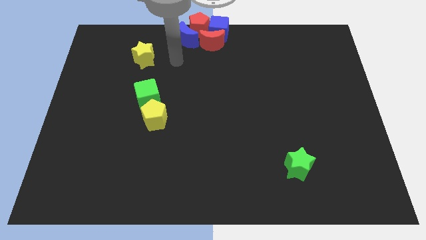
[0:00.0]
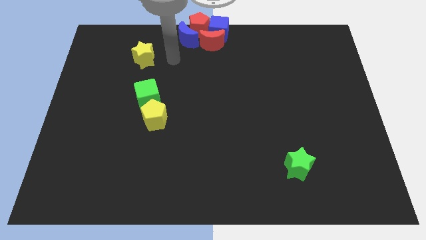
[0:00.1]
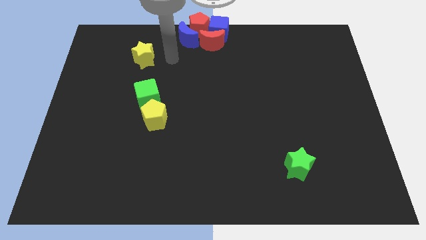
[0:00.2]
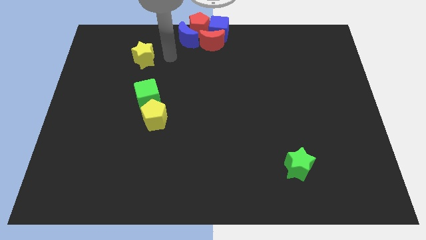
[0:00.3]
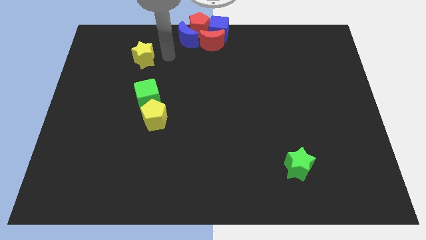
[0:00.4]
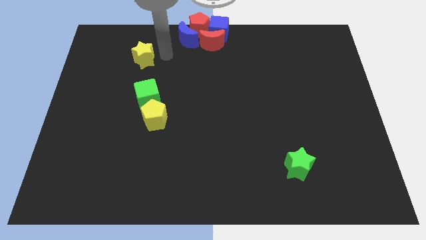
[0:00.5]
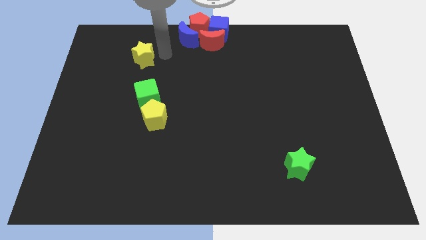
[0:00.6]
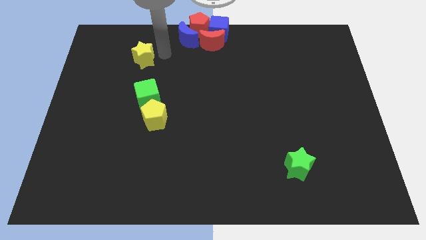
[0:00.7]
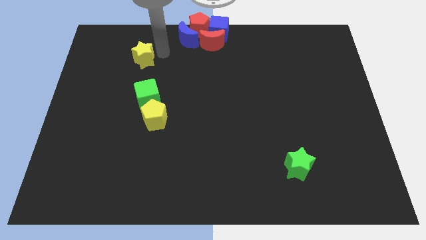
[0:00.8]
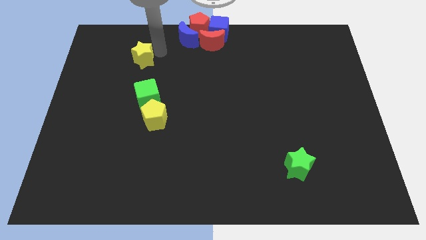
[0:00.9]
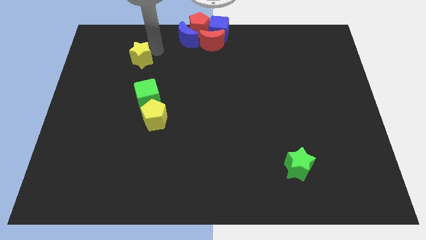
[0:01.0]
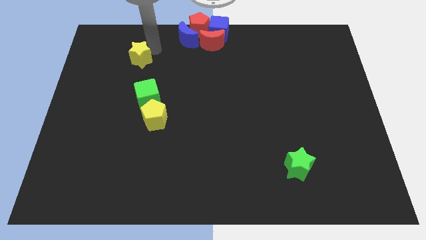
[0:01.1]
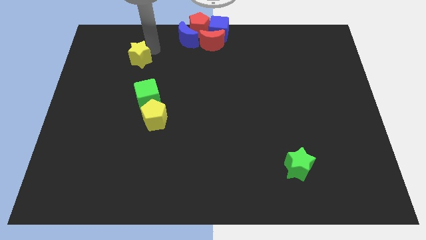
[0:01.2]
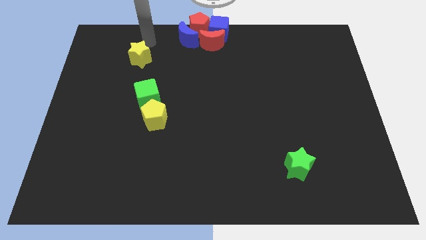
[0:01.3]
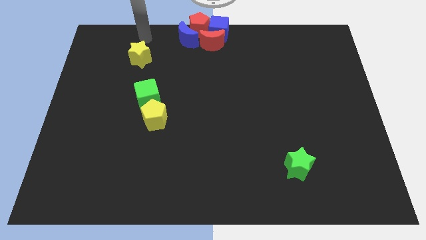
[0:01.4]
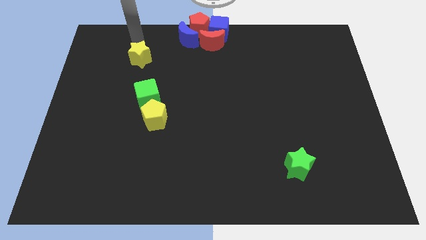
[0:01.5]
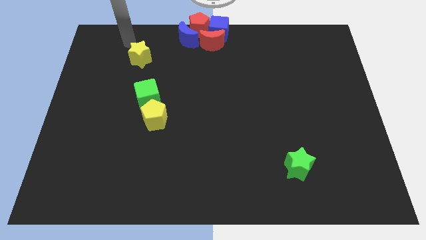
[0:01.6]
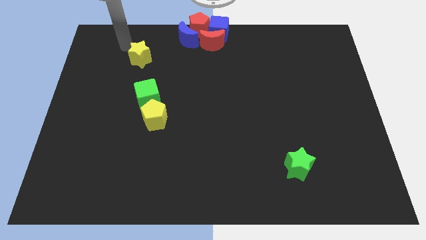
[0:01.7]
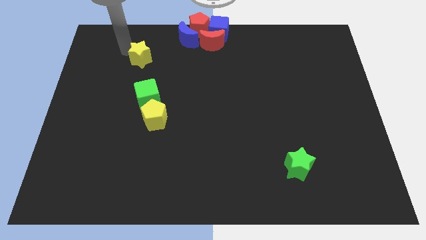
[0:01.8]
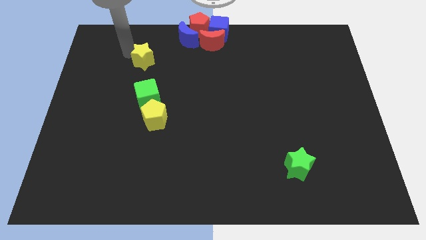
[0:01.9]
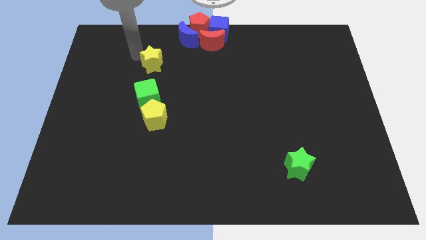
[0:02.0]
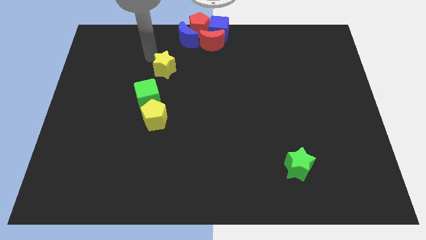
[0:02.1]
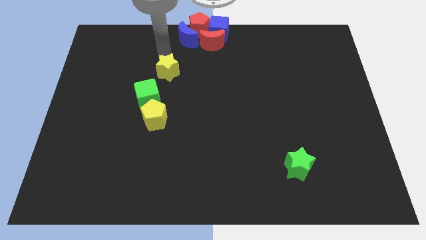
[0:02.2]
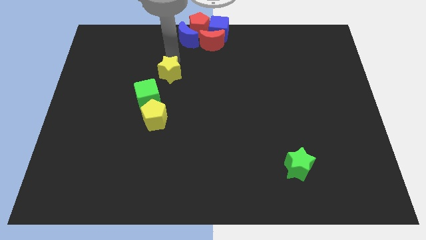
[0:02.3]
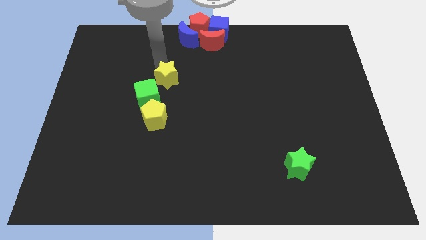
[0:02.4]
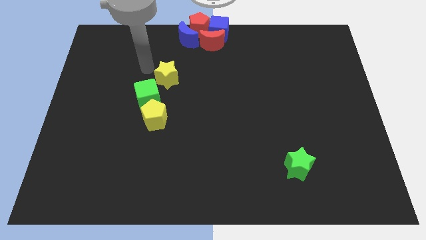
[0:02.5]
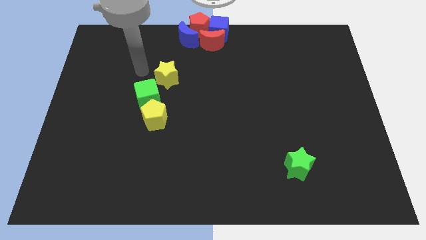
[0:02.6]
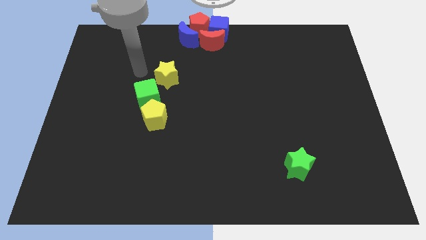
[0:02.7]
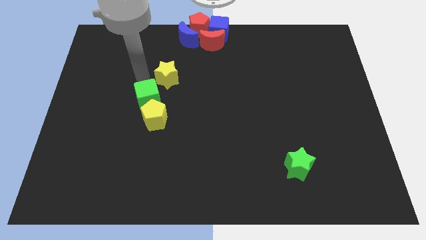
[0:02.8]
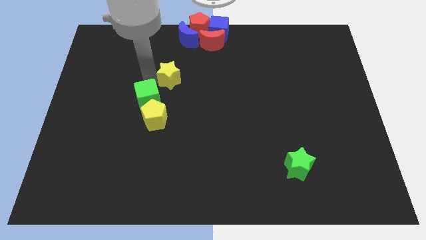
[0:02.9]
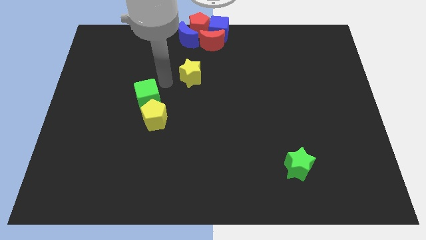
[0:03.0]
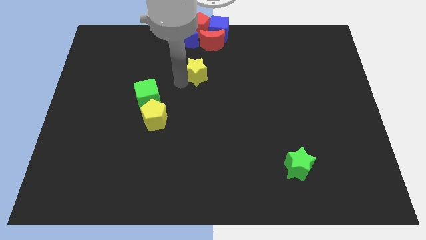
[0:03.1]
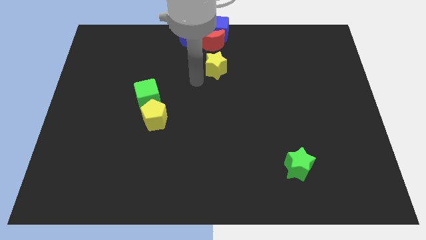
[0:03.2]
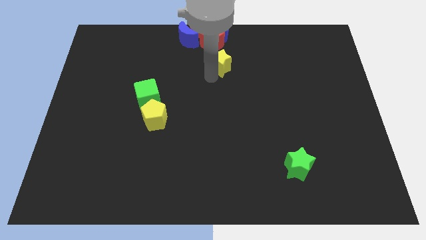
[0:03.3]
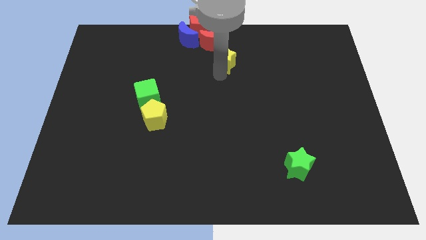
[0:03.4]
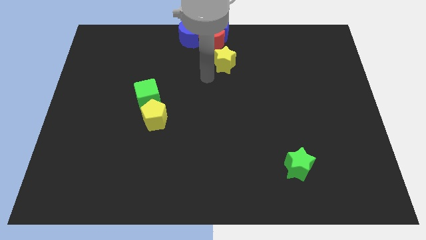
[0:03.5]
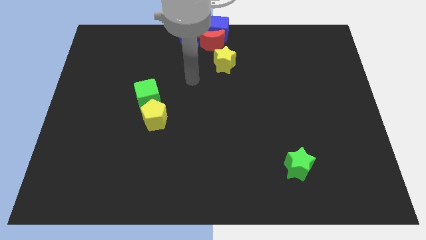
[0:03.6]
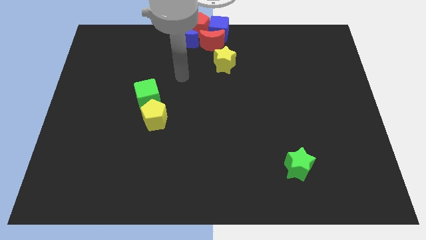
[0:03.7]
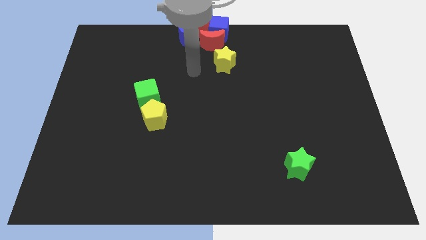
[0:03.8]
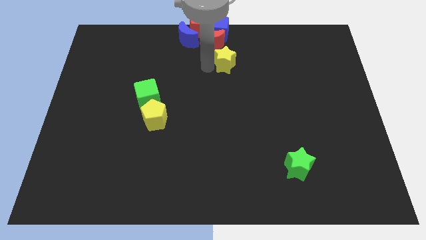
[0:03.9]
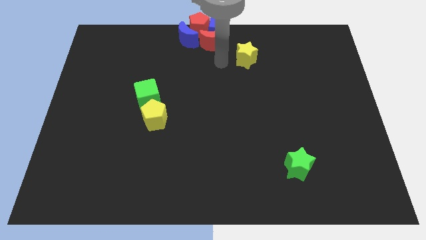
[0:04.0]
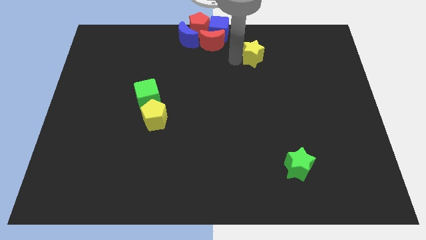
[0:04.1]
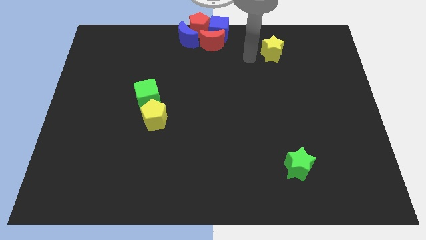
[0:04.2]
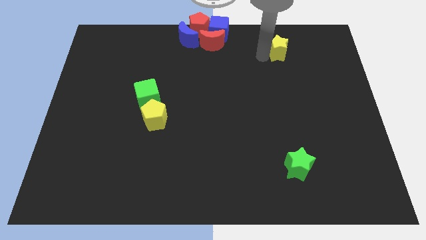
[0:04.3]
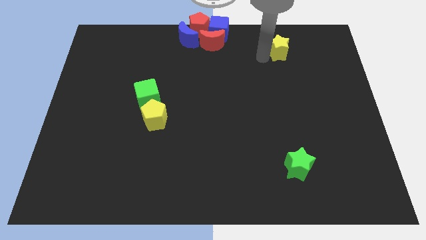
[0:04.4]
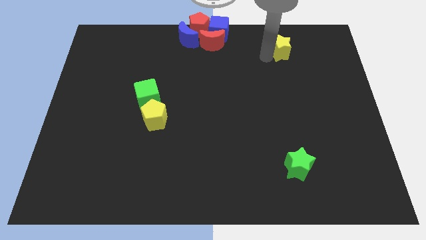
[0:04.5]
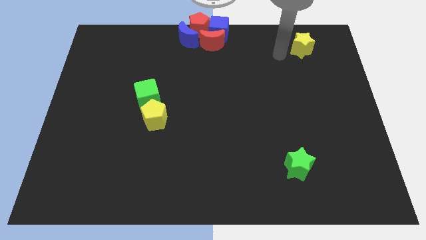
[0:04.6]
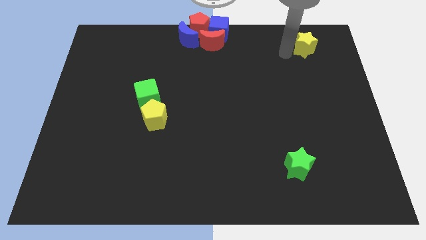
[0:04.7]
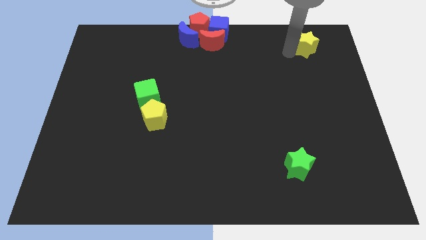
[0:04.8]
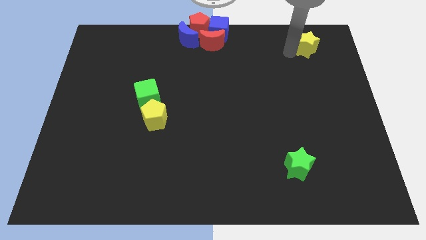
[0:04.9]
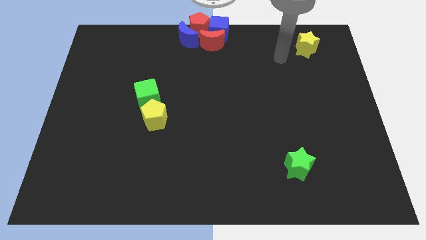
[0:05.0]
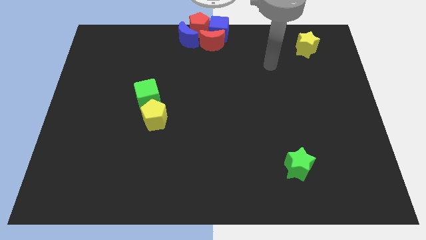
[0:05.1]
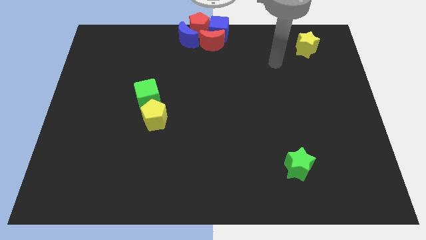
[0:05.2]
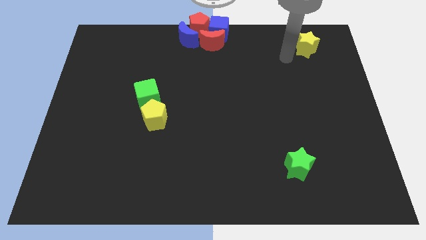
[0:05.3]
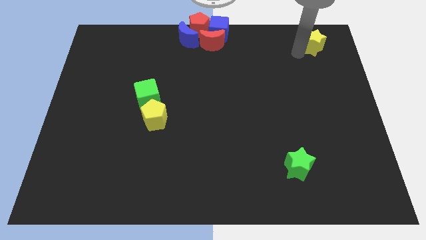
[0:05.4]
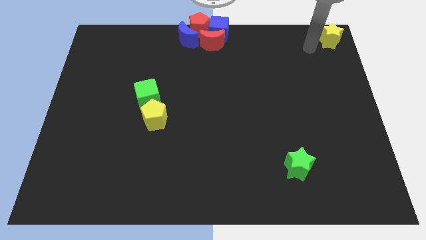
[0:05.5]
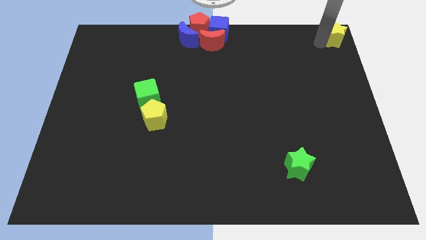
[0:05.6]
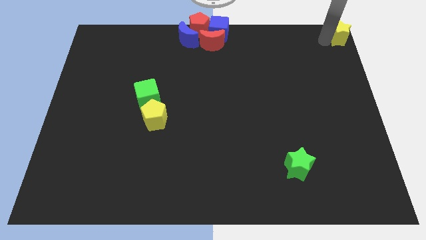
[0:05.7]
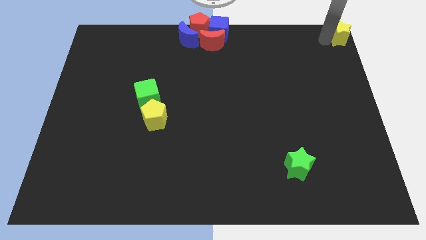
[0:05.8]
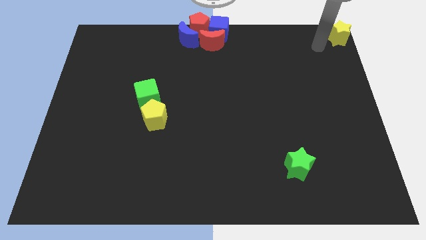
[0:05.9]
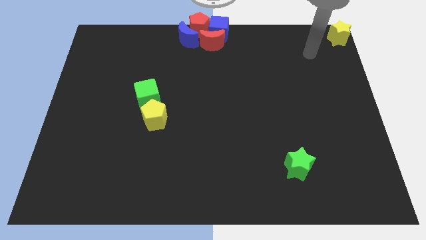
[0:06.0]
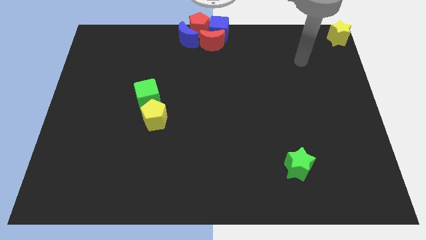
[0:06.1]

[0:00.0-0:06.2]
slide the yellow star to the top right corner

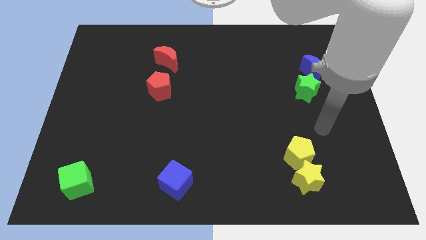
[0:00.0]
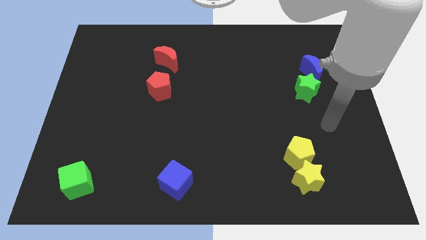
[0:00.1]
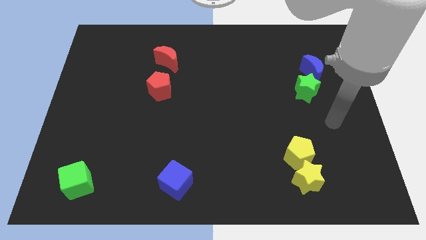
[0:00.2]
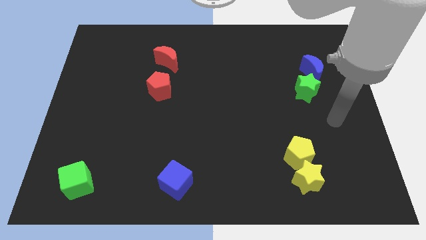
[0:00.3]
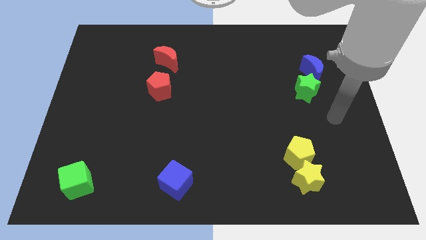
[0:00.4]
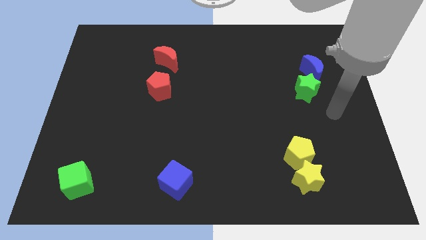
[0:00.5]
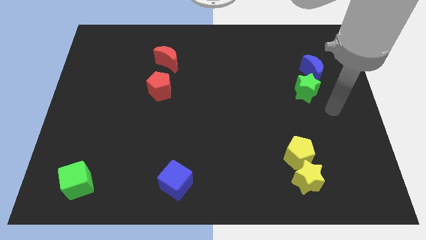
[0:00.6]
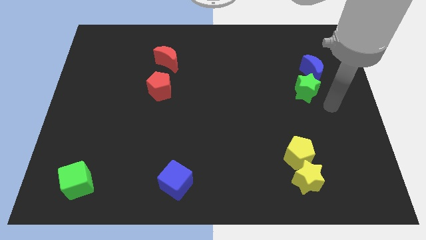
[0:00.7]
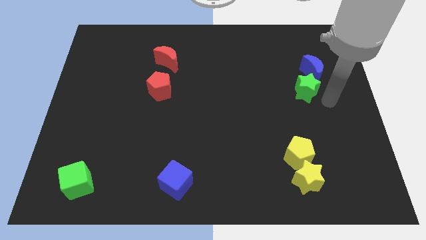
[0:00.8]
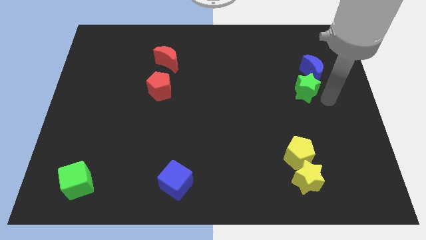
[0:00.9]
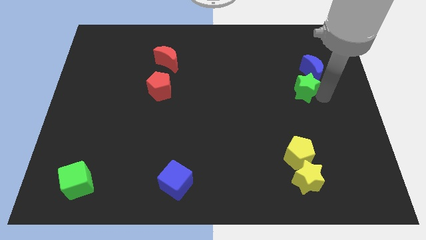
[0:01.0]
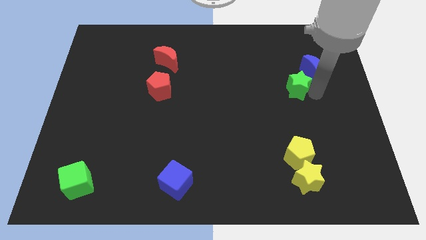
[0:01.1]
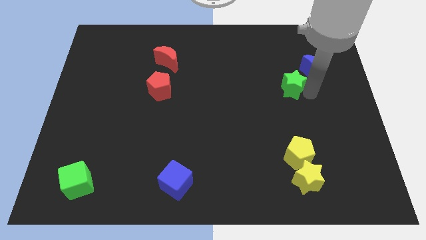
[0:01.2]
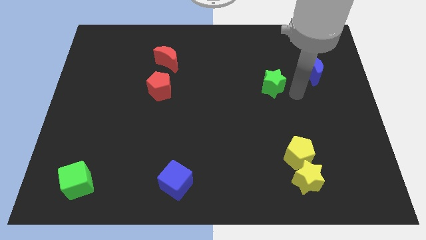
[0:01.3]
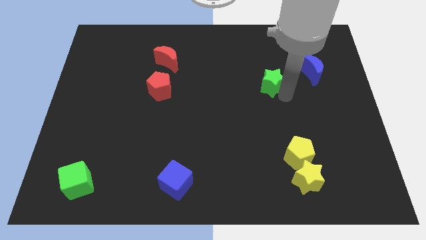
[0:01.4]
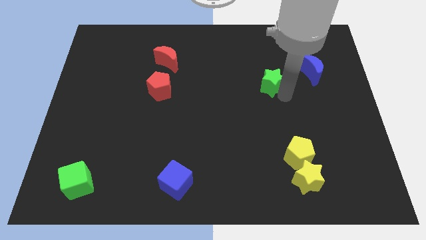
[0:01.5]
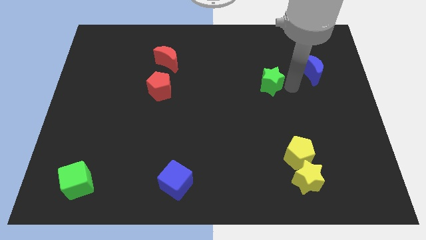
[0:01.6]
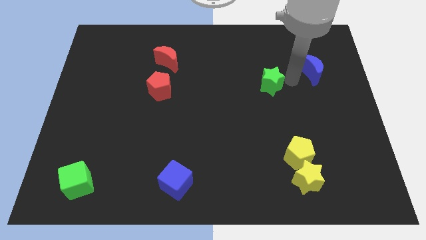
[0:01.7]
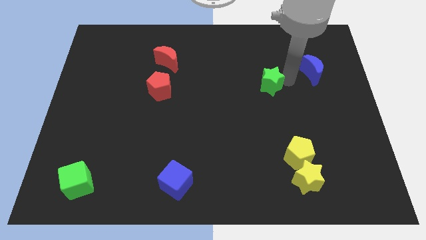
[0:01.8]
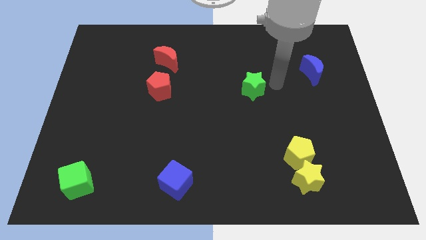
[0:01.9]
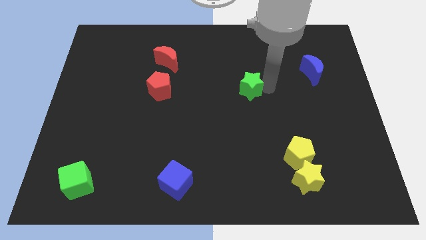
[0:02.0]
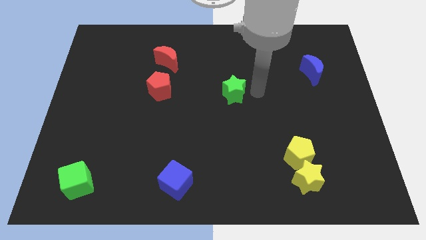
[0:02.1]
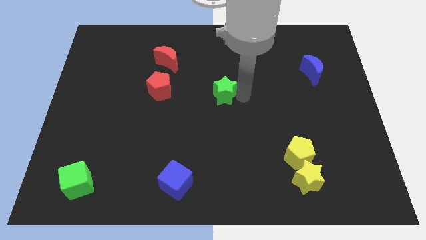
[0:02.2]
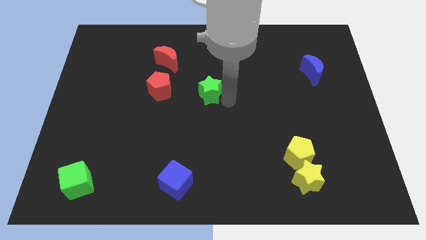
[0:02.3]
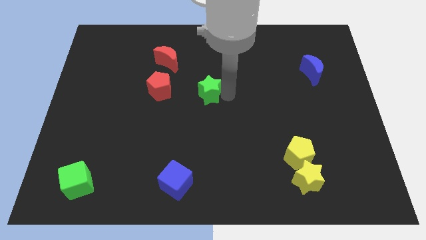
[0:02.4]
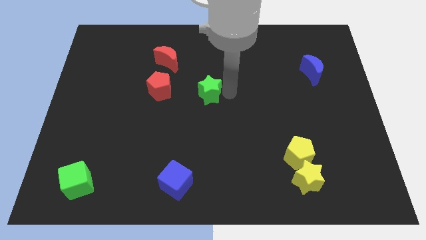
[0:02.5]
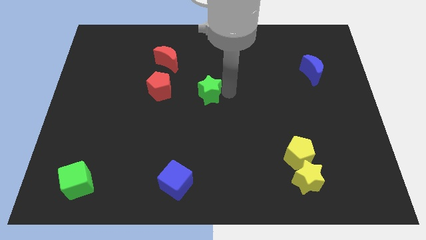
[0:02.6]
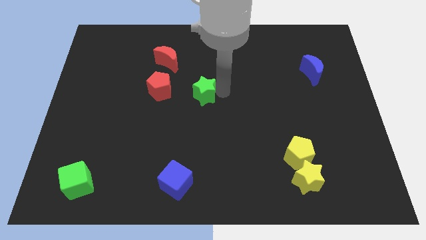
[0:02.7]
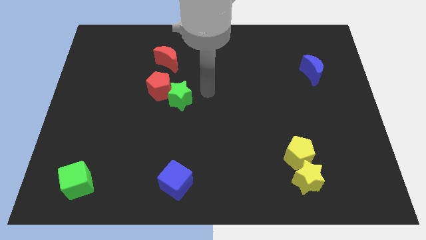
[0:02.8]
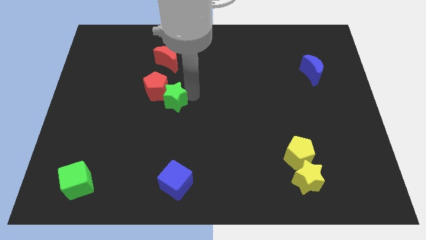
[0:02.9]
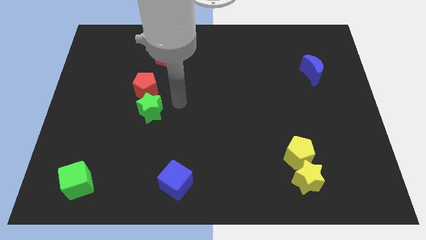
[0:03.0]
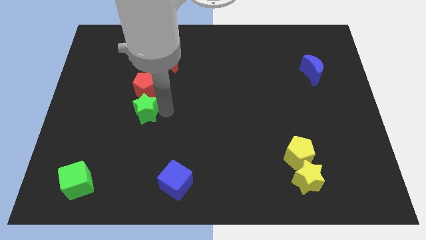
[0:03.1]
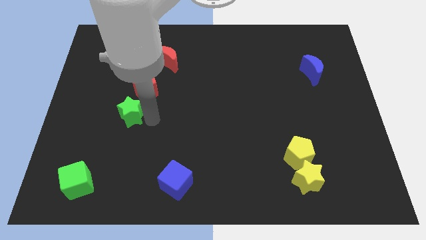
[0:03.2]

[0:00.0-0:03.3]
place the green star below the red pentagon
